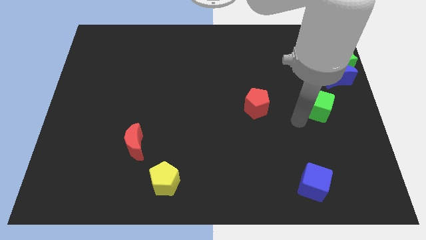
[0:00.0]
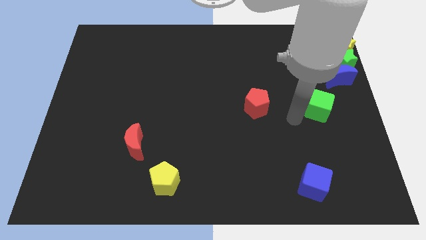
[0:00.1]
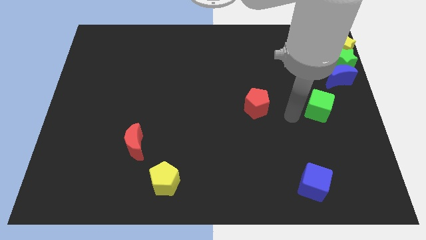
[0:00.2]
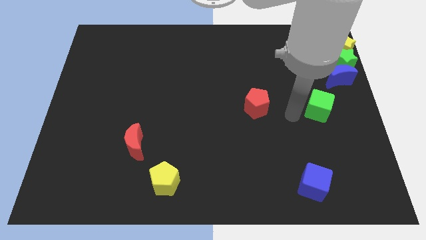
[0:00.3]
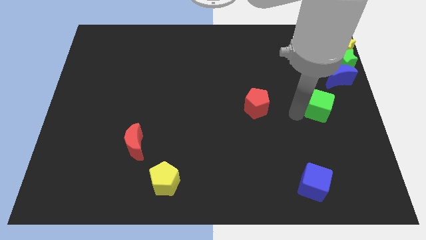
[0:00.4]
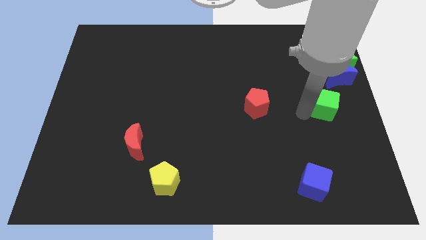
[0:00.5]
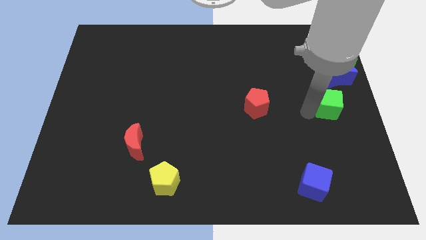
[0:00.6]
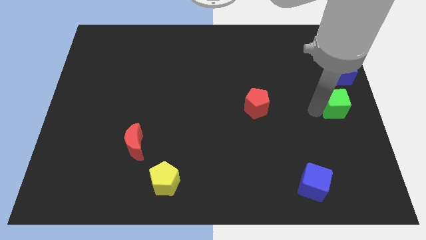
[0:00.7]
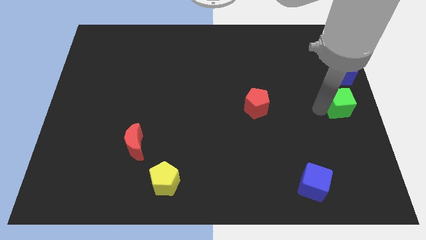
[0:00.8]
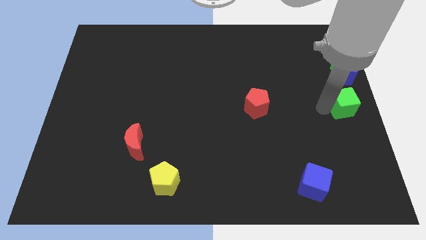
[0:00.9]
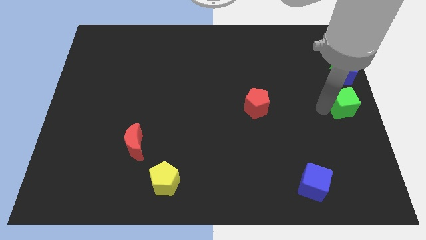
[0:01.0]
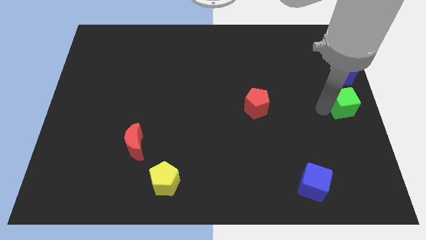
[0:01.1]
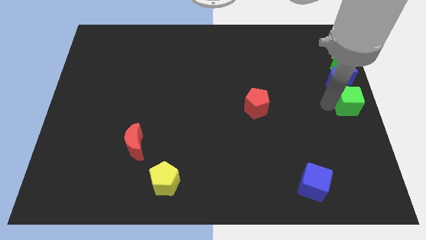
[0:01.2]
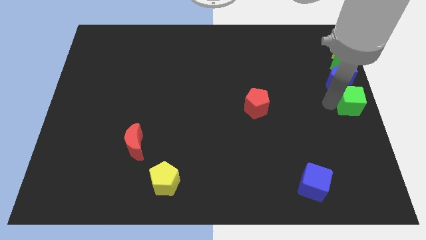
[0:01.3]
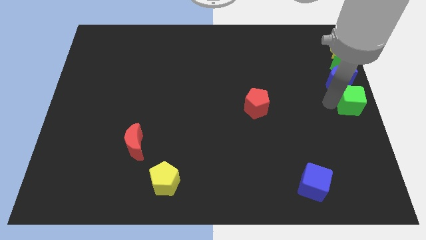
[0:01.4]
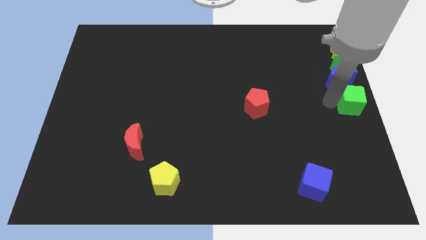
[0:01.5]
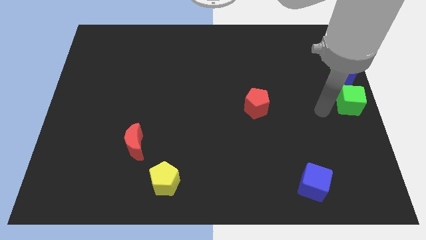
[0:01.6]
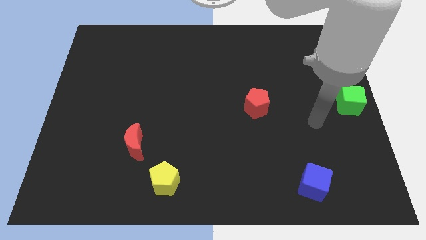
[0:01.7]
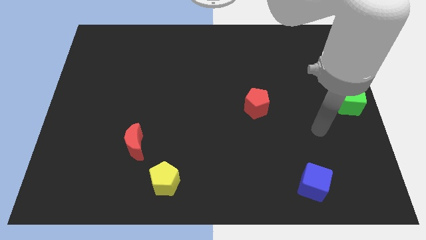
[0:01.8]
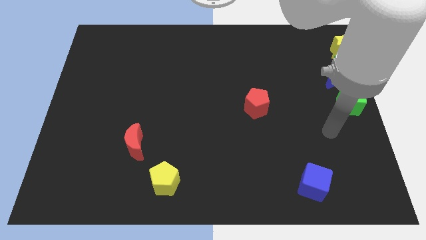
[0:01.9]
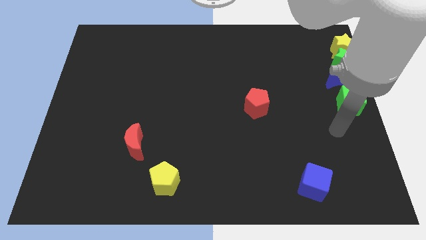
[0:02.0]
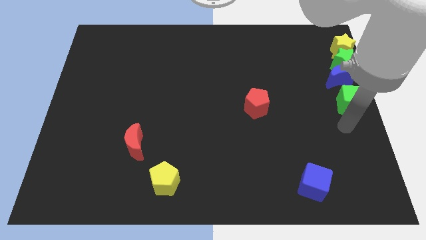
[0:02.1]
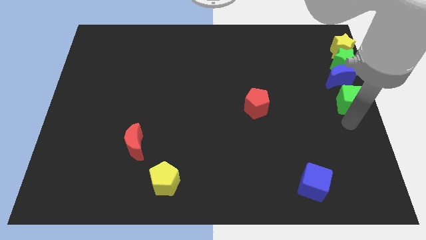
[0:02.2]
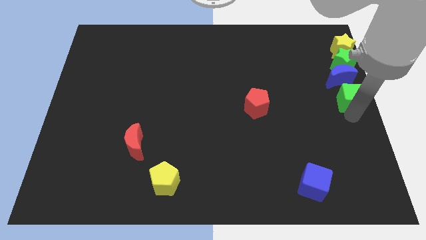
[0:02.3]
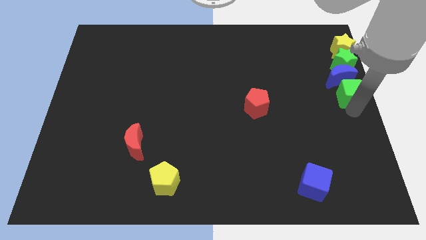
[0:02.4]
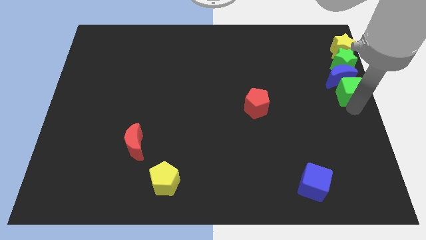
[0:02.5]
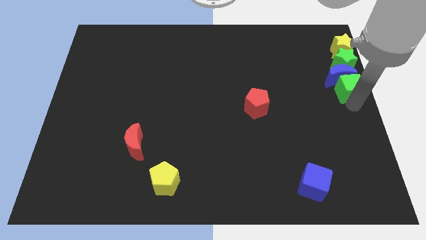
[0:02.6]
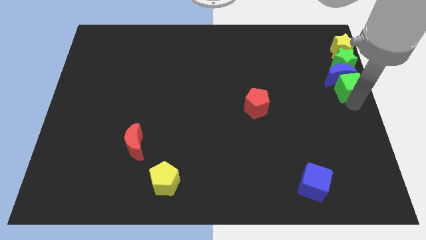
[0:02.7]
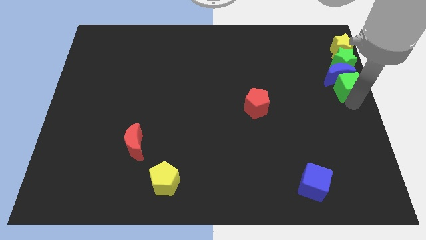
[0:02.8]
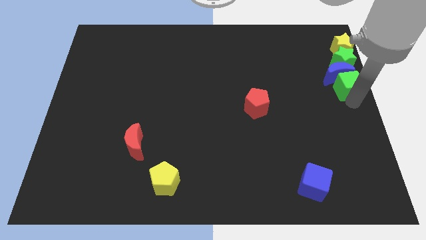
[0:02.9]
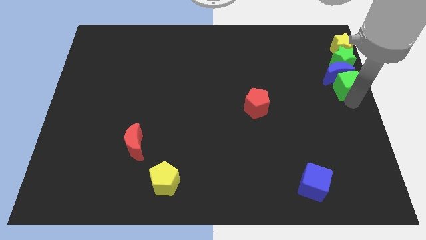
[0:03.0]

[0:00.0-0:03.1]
move the green cube below to the blue crescent

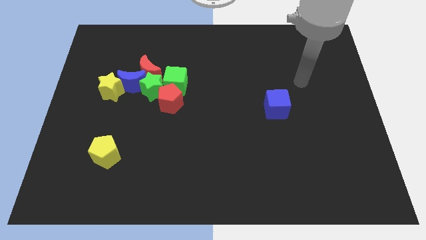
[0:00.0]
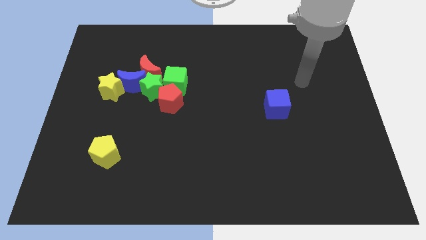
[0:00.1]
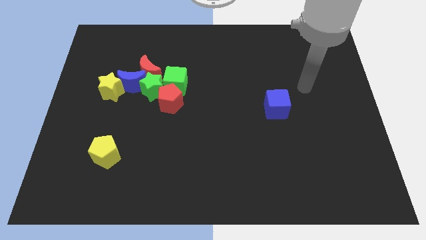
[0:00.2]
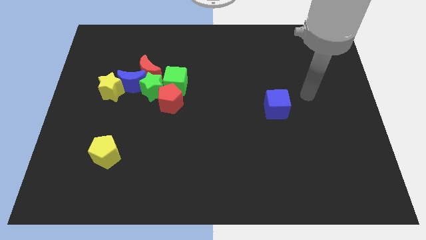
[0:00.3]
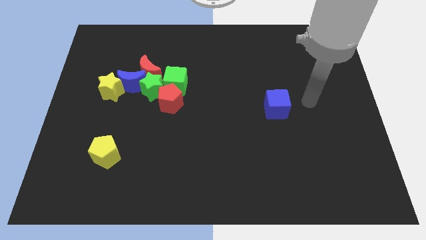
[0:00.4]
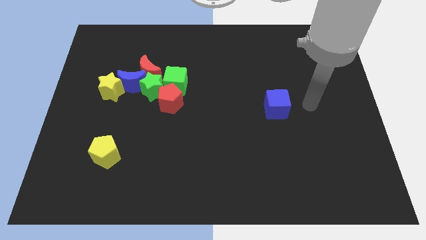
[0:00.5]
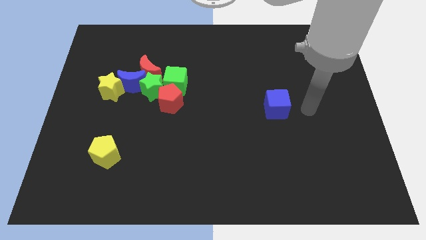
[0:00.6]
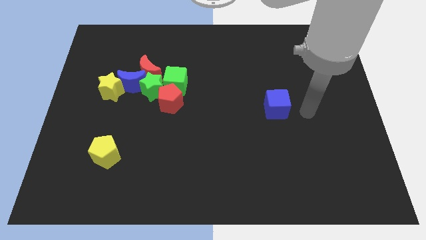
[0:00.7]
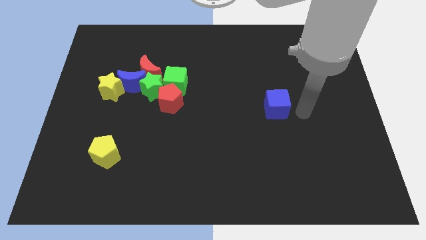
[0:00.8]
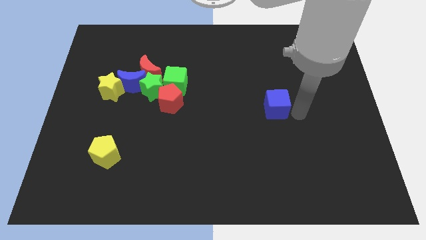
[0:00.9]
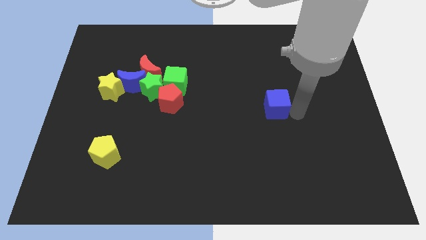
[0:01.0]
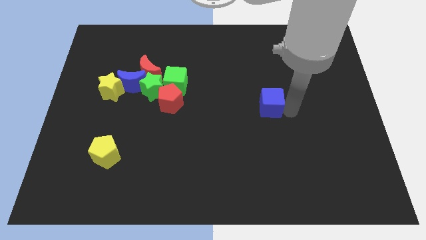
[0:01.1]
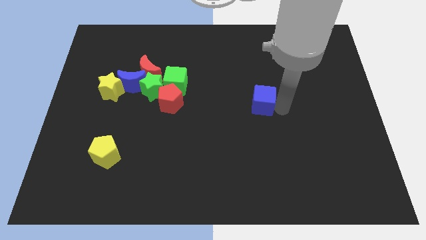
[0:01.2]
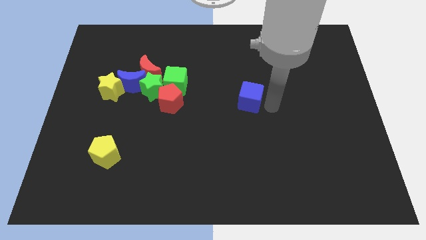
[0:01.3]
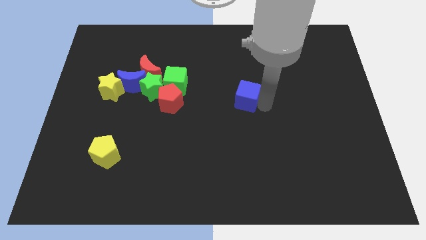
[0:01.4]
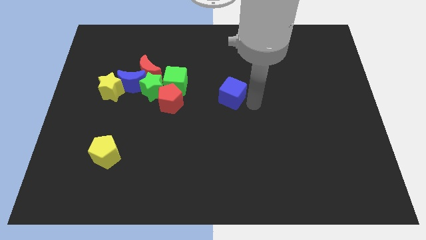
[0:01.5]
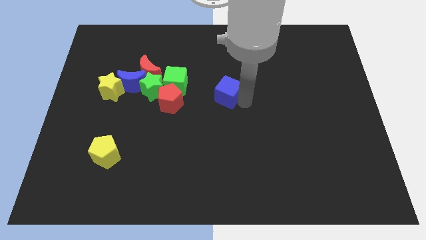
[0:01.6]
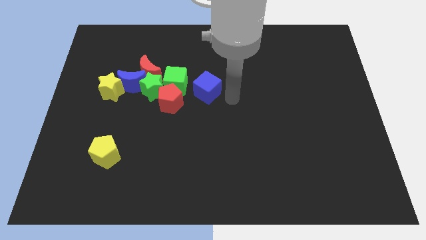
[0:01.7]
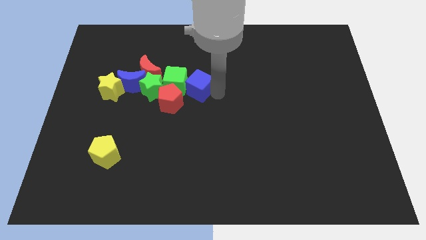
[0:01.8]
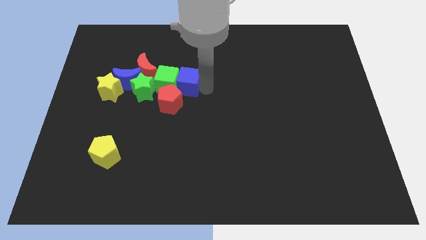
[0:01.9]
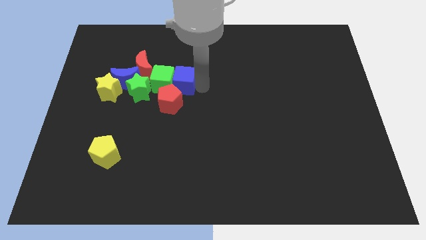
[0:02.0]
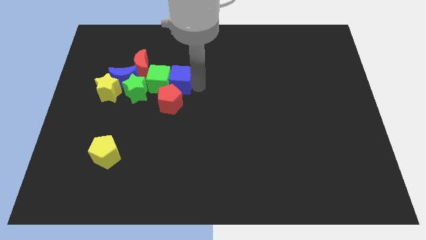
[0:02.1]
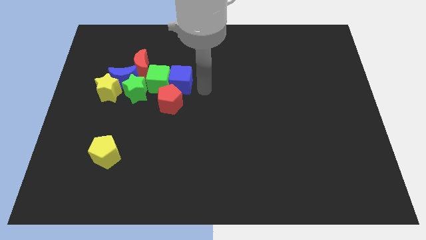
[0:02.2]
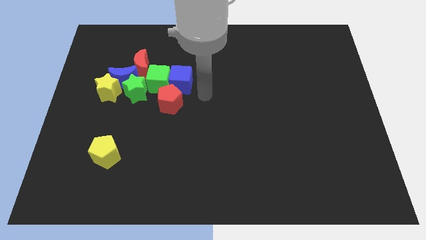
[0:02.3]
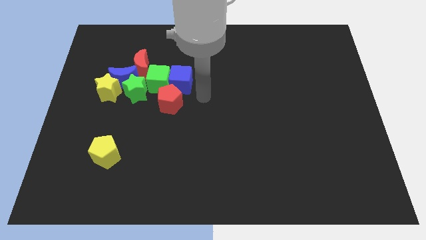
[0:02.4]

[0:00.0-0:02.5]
push blue cube into the green cube

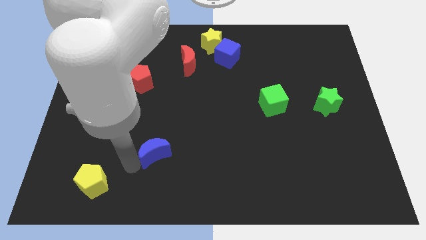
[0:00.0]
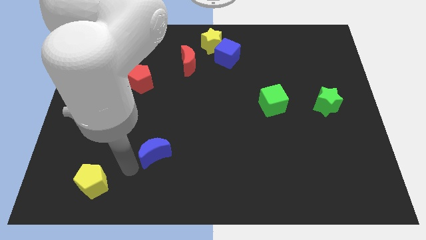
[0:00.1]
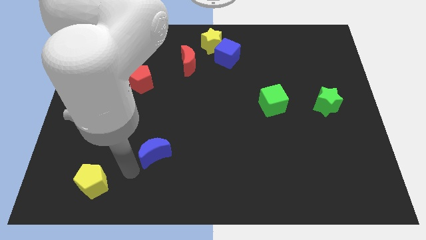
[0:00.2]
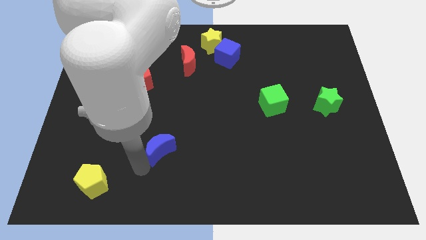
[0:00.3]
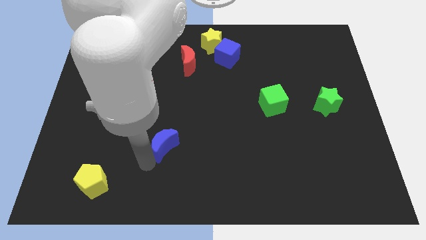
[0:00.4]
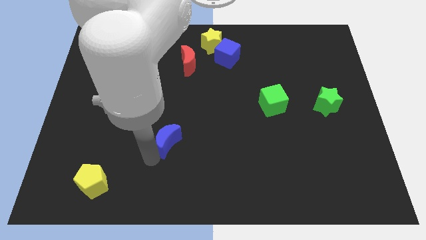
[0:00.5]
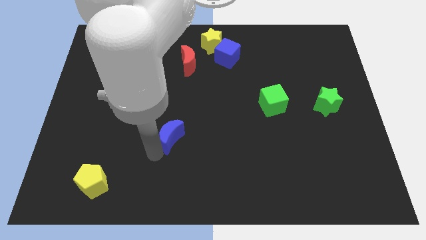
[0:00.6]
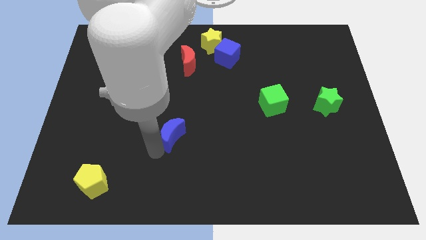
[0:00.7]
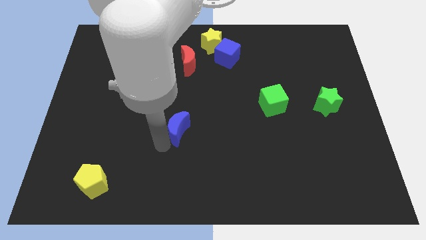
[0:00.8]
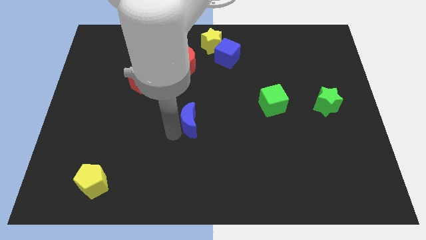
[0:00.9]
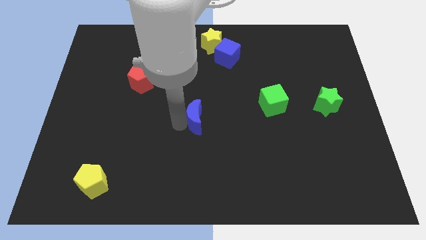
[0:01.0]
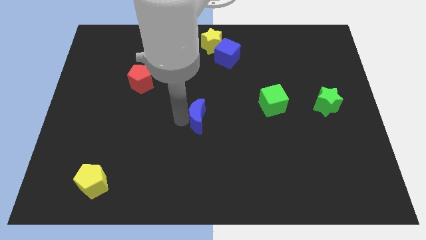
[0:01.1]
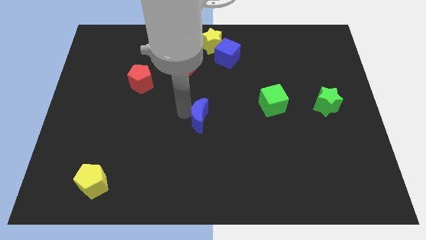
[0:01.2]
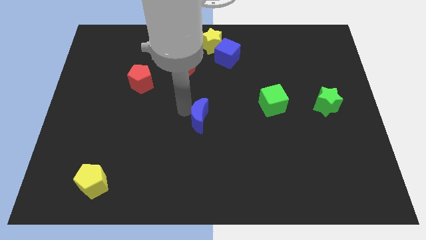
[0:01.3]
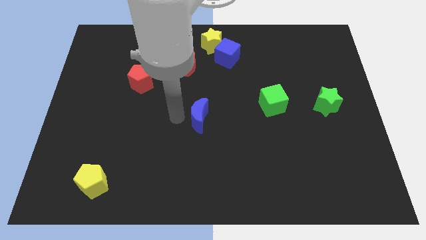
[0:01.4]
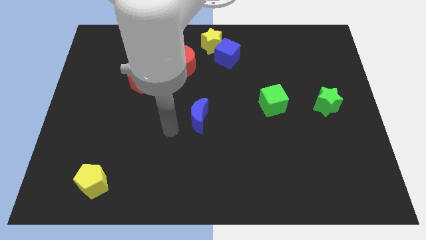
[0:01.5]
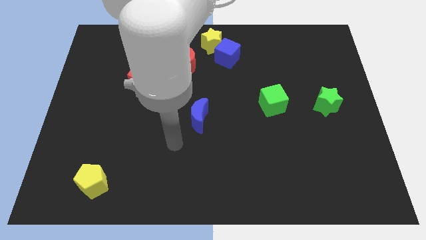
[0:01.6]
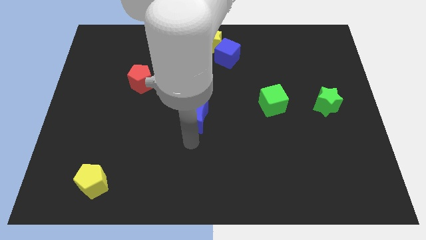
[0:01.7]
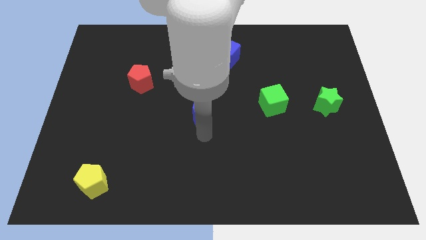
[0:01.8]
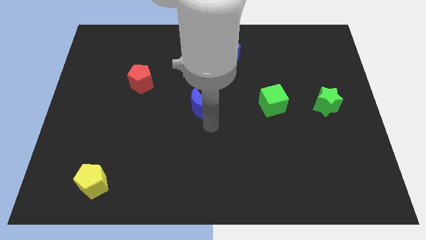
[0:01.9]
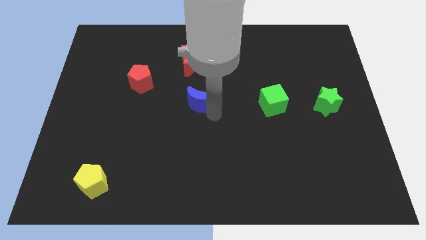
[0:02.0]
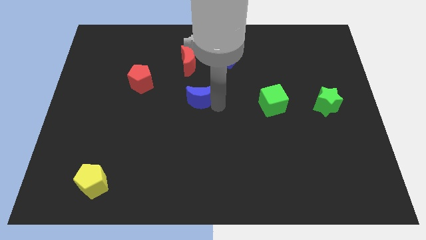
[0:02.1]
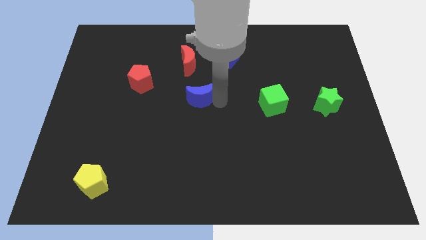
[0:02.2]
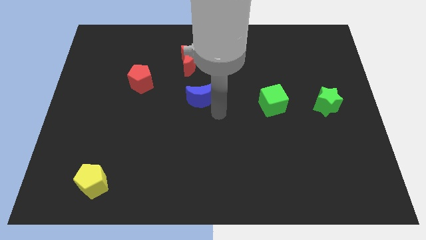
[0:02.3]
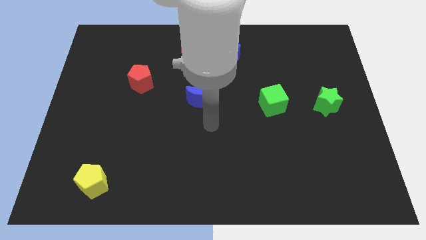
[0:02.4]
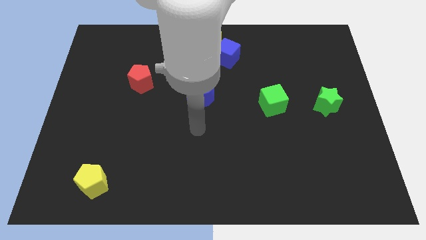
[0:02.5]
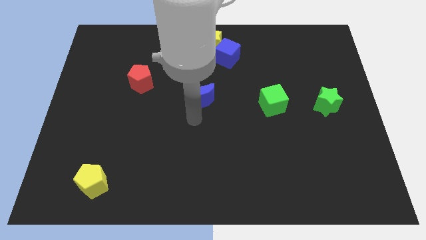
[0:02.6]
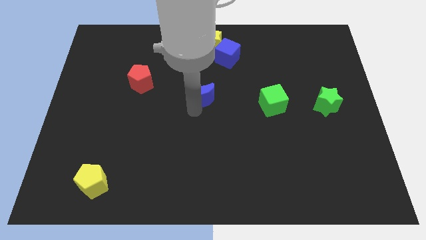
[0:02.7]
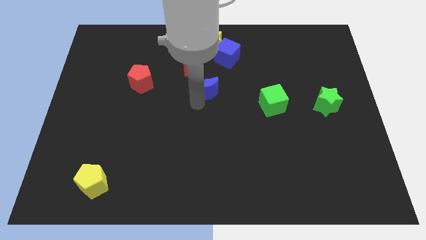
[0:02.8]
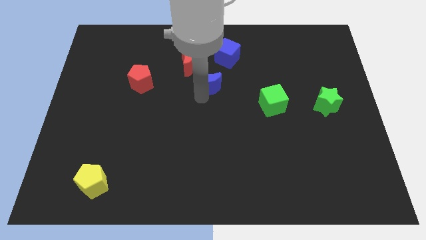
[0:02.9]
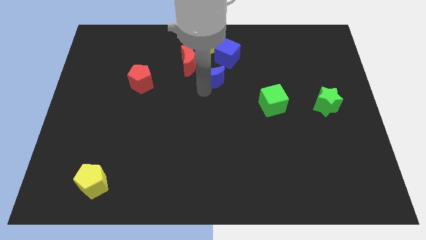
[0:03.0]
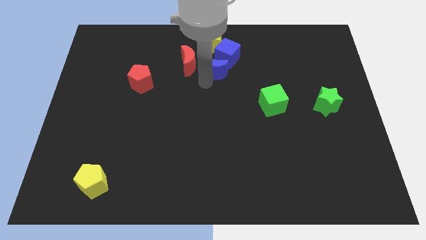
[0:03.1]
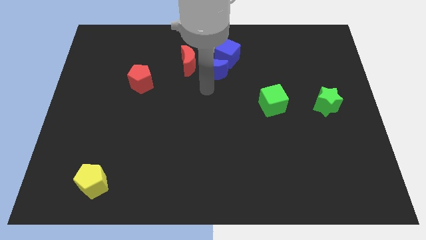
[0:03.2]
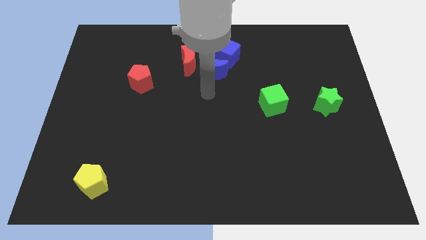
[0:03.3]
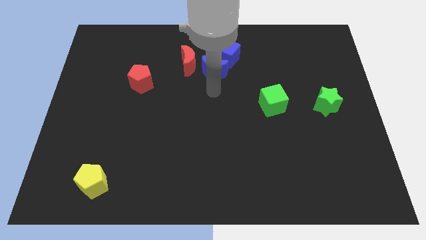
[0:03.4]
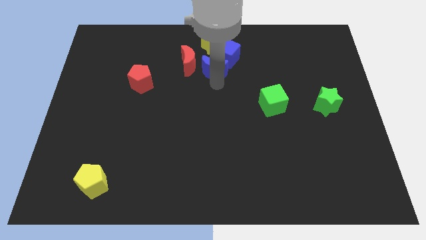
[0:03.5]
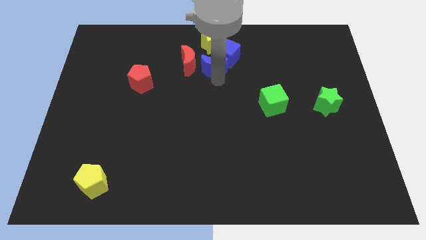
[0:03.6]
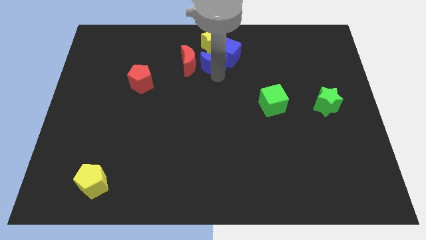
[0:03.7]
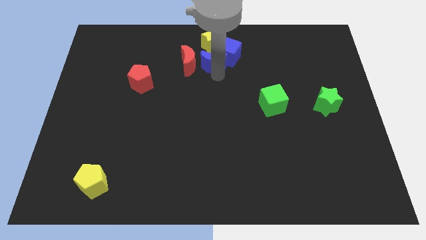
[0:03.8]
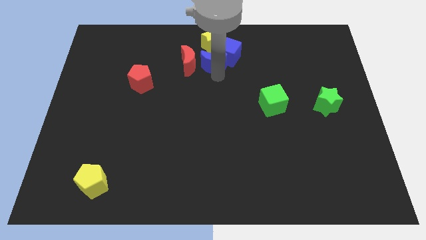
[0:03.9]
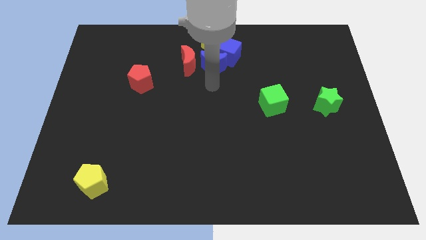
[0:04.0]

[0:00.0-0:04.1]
drag the blue crescent into the bottom side of the blue cube
